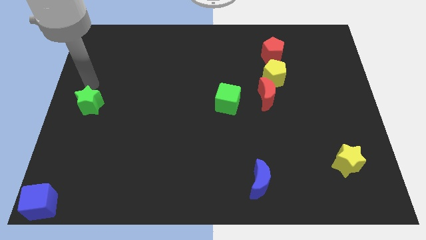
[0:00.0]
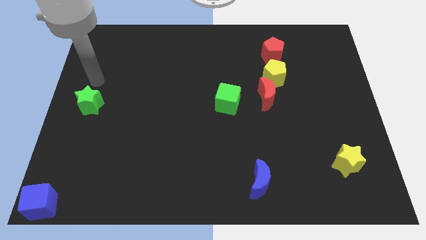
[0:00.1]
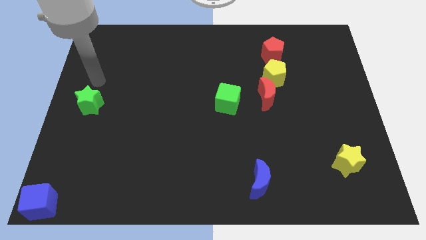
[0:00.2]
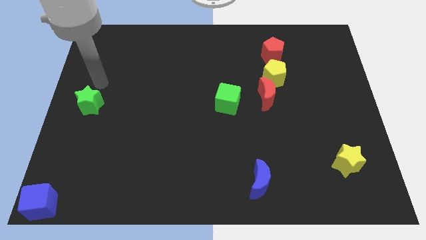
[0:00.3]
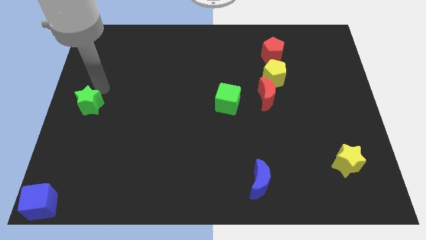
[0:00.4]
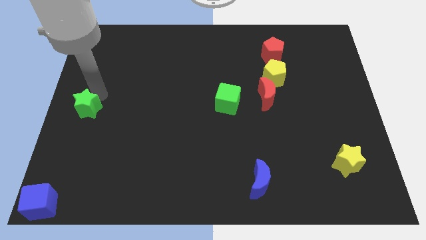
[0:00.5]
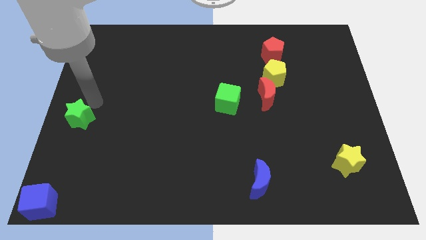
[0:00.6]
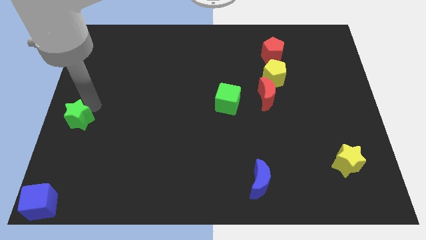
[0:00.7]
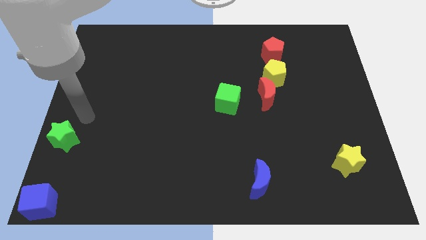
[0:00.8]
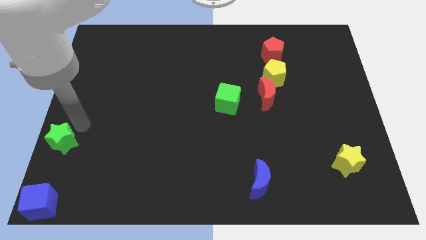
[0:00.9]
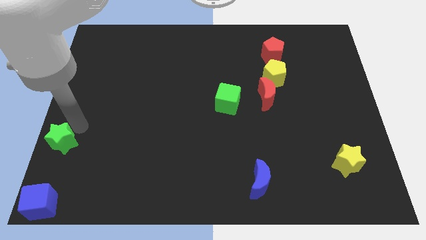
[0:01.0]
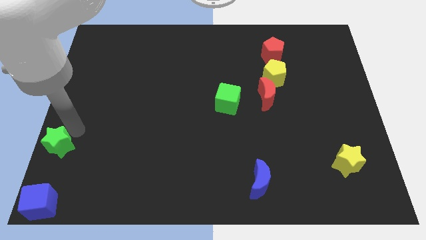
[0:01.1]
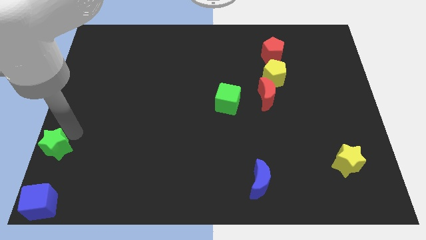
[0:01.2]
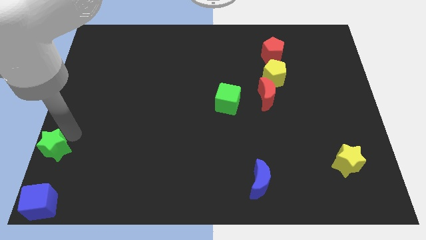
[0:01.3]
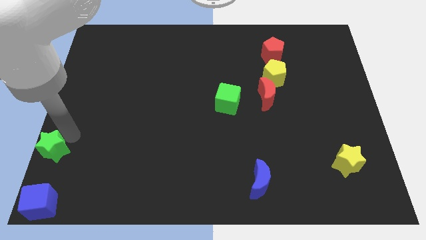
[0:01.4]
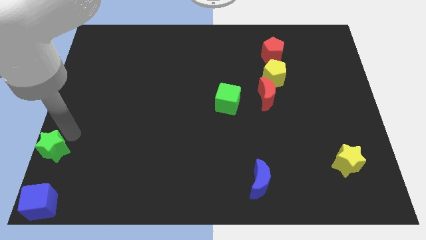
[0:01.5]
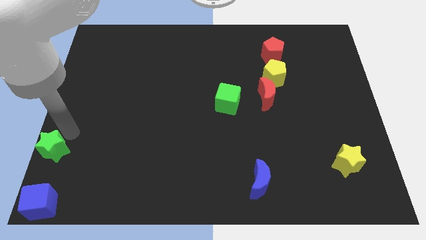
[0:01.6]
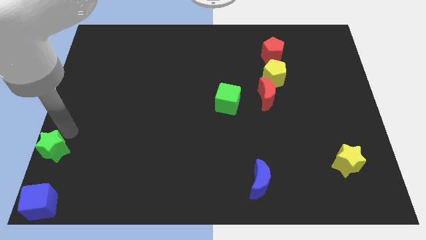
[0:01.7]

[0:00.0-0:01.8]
place the green star at the top of the blue cube

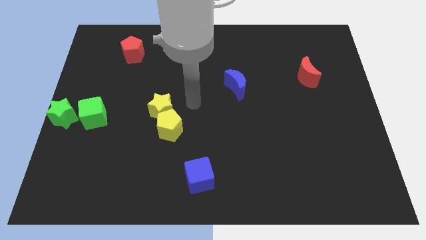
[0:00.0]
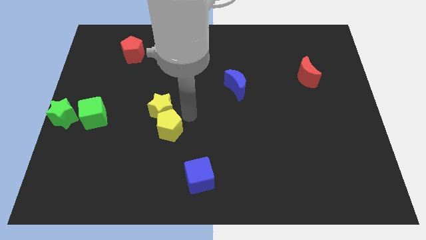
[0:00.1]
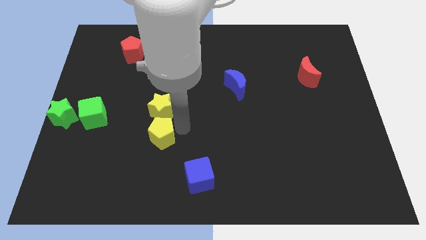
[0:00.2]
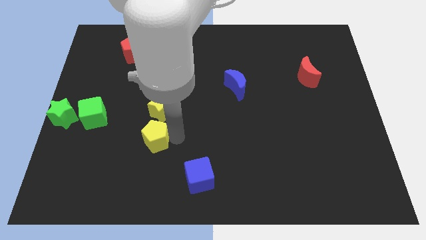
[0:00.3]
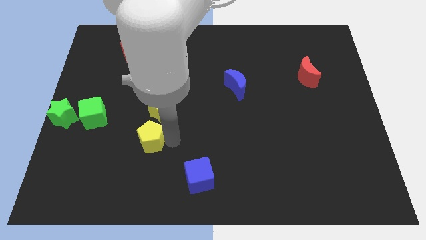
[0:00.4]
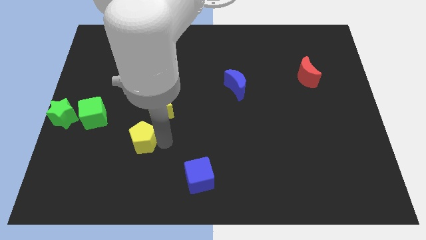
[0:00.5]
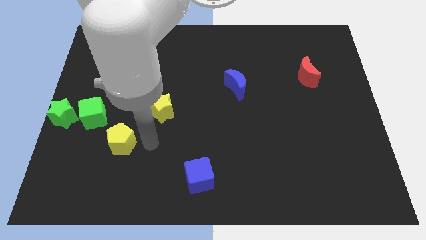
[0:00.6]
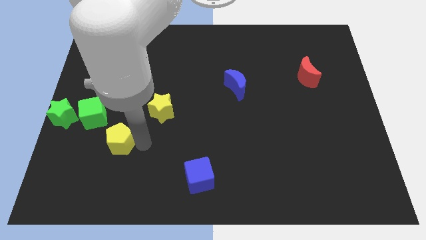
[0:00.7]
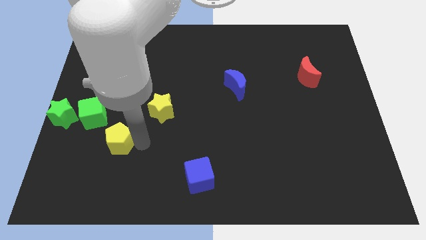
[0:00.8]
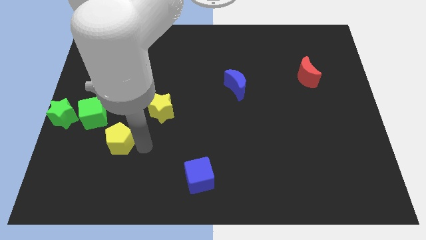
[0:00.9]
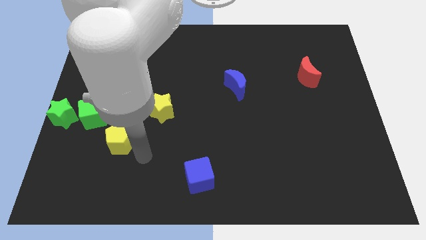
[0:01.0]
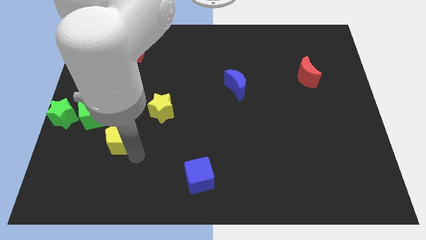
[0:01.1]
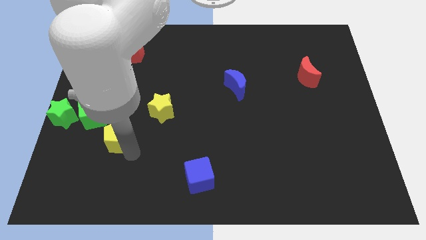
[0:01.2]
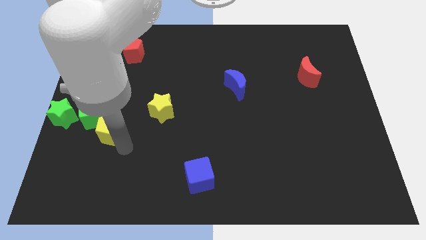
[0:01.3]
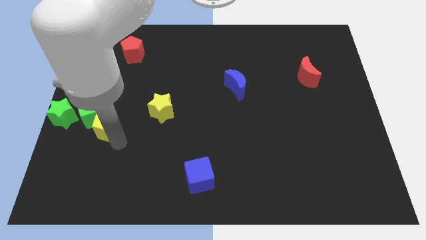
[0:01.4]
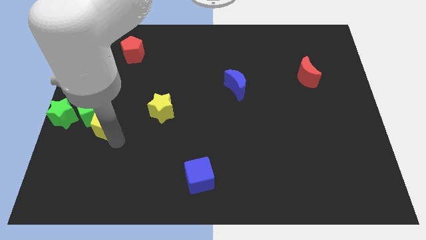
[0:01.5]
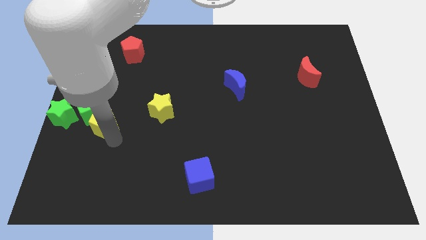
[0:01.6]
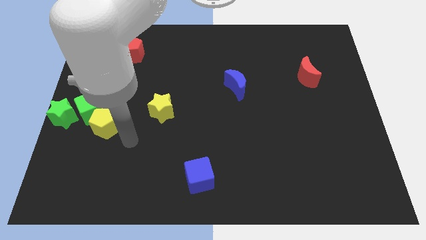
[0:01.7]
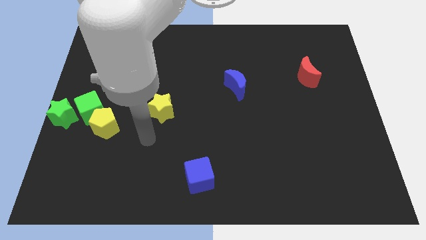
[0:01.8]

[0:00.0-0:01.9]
slide the yellow pentagon into the green cube

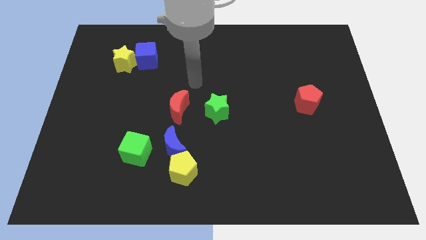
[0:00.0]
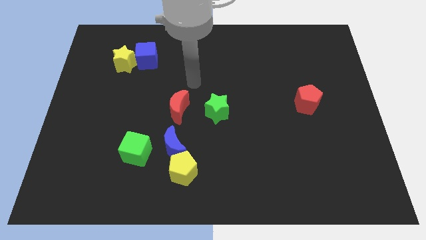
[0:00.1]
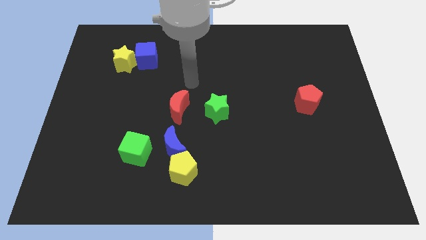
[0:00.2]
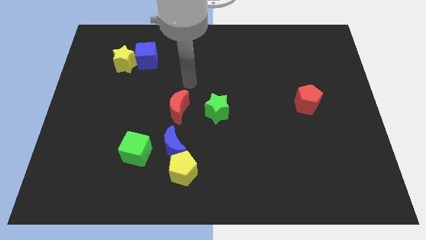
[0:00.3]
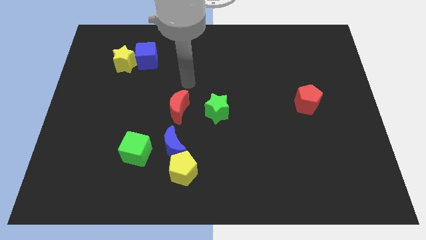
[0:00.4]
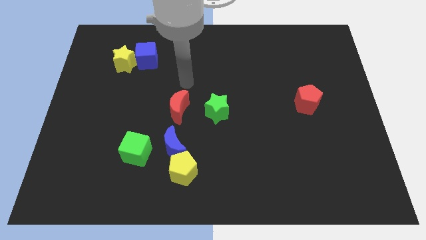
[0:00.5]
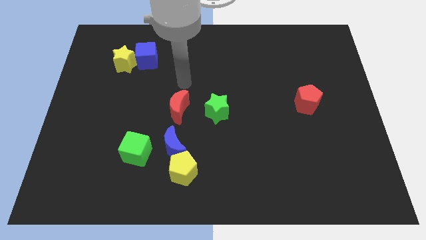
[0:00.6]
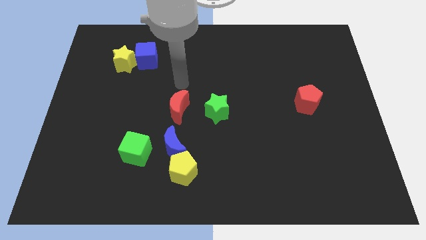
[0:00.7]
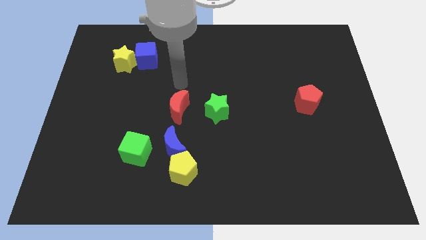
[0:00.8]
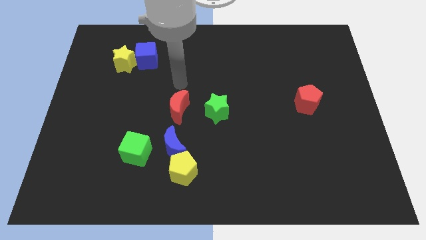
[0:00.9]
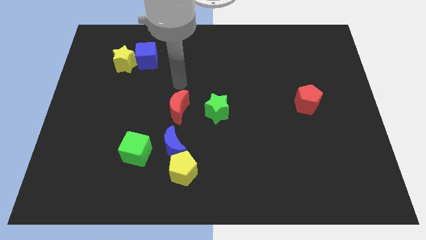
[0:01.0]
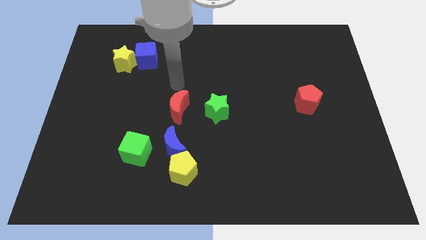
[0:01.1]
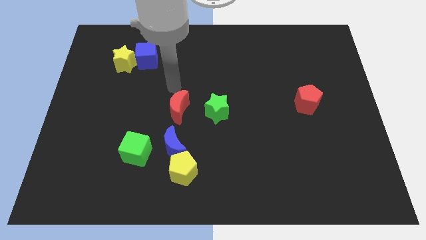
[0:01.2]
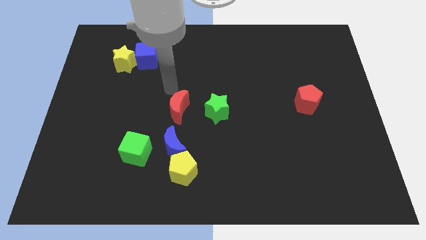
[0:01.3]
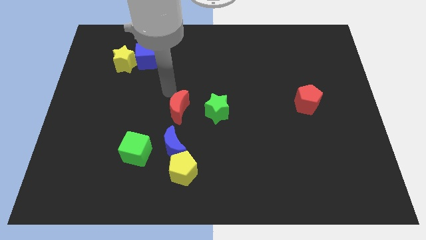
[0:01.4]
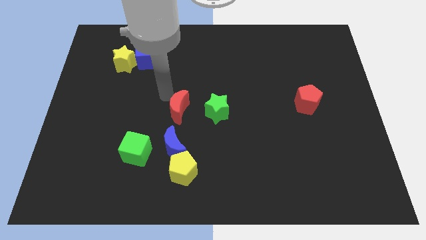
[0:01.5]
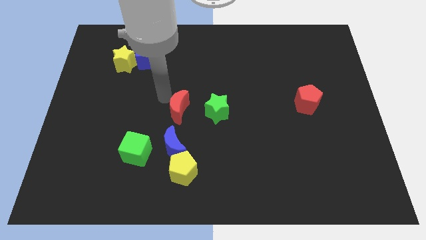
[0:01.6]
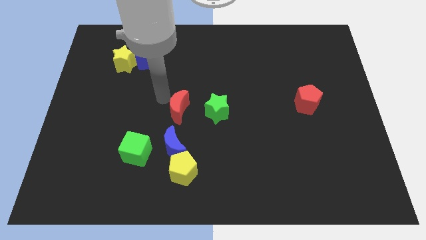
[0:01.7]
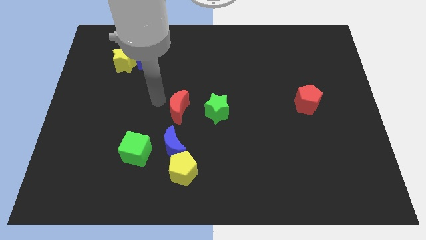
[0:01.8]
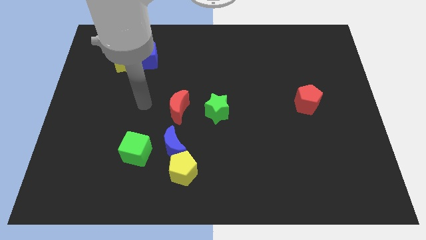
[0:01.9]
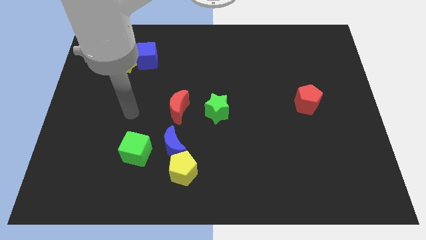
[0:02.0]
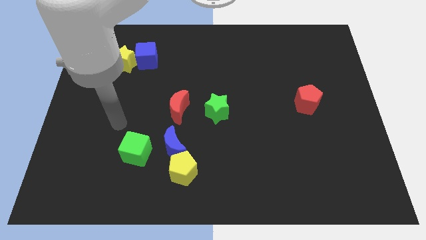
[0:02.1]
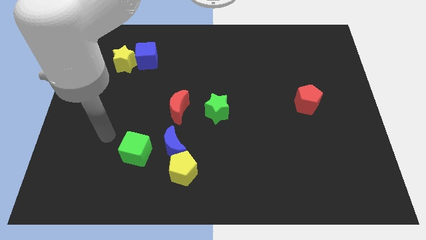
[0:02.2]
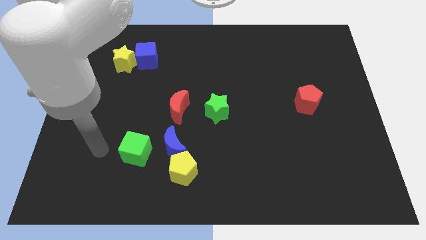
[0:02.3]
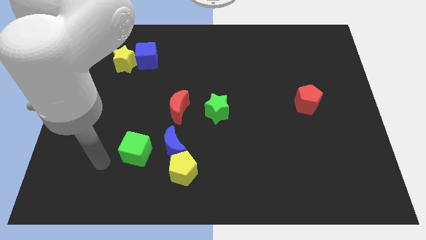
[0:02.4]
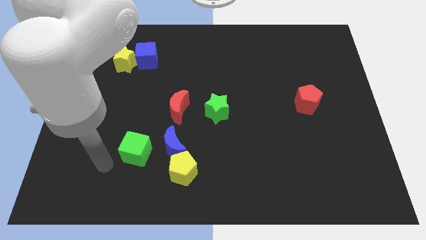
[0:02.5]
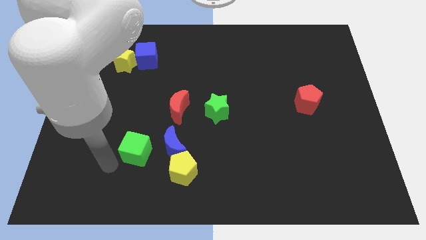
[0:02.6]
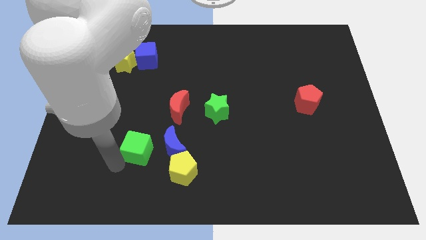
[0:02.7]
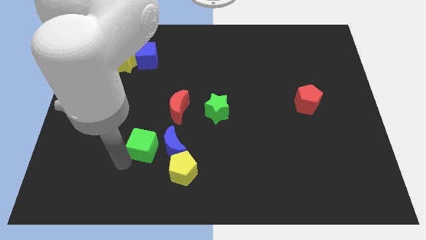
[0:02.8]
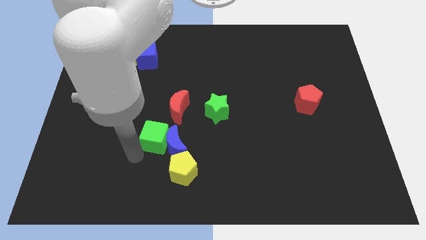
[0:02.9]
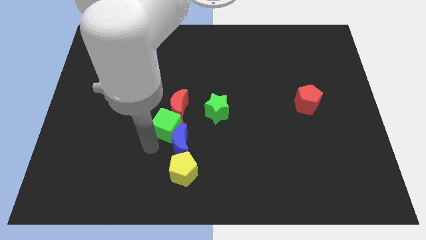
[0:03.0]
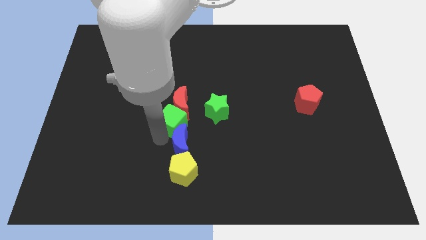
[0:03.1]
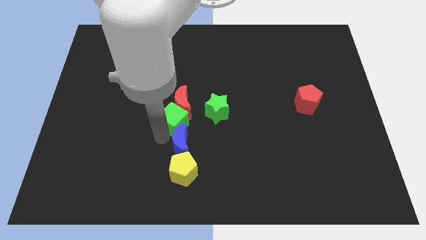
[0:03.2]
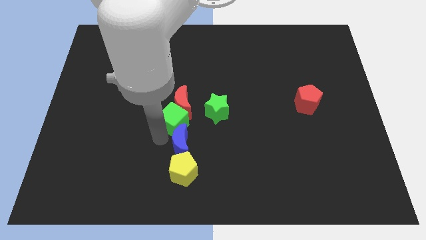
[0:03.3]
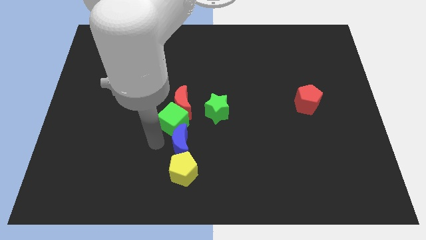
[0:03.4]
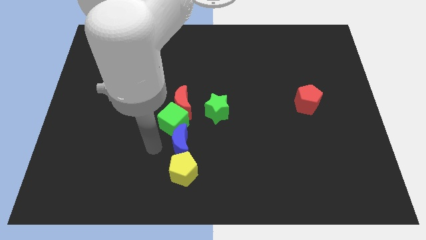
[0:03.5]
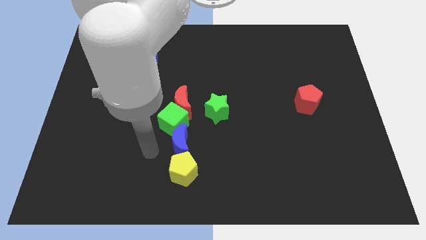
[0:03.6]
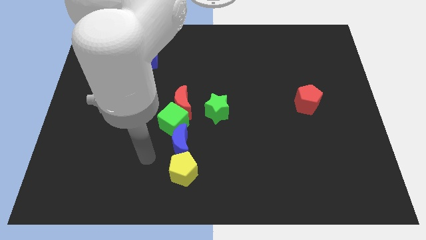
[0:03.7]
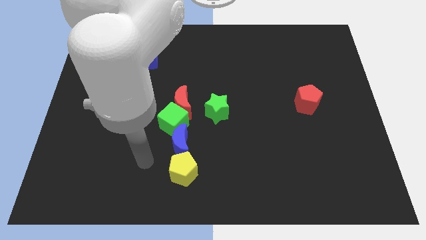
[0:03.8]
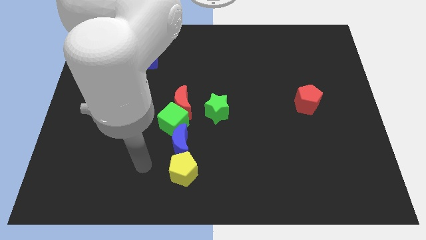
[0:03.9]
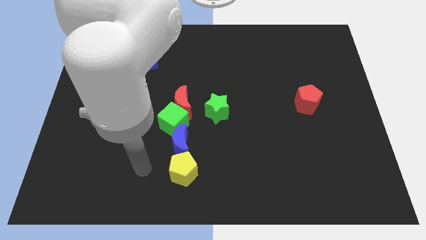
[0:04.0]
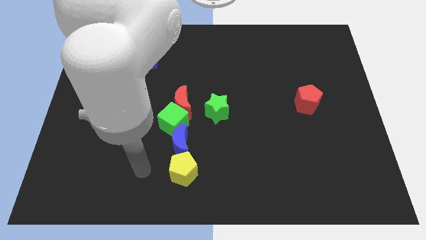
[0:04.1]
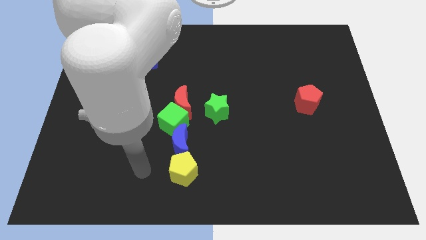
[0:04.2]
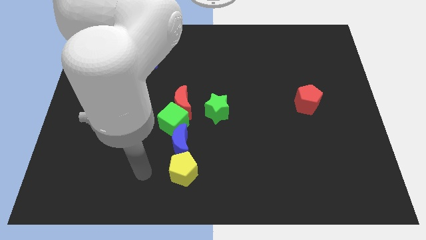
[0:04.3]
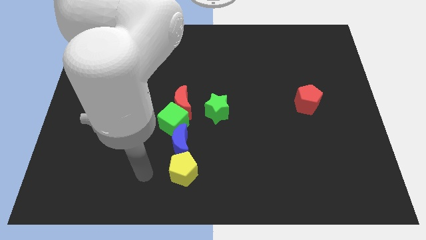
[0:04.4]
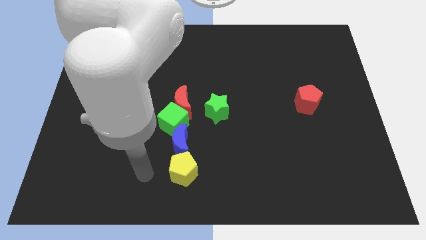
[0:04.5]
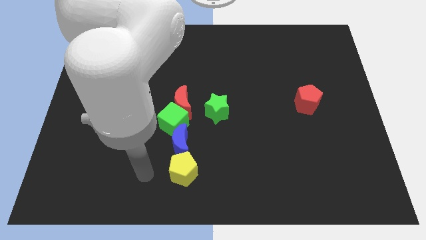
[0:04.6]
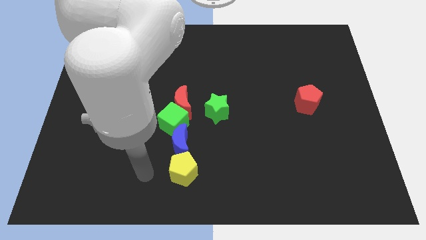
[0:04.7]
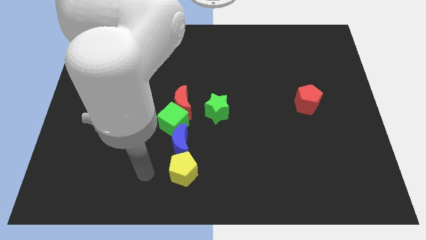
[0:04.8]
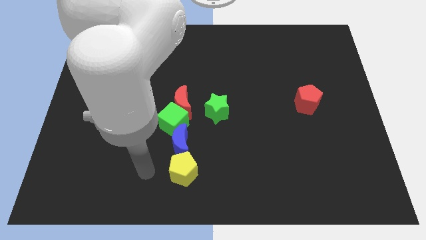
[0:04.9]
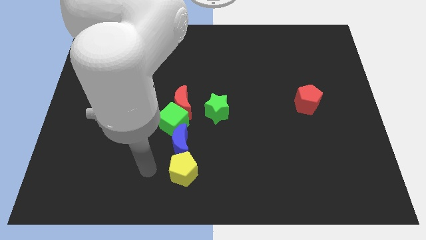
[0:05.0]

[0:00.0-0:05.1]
push the green cube into the group of blocks

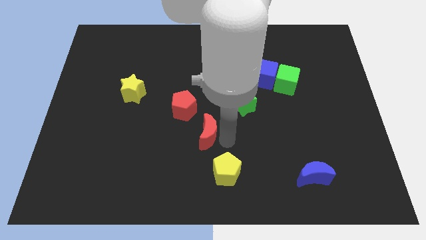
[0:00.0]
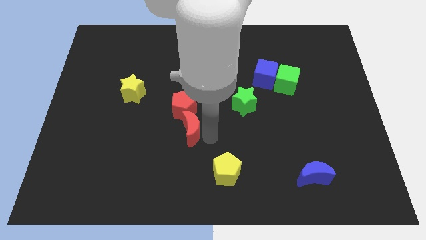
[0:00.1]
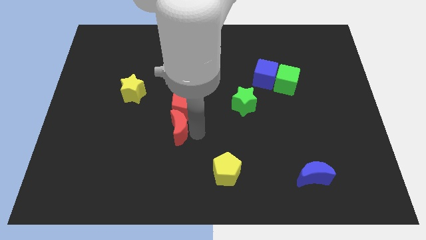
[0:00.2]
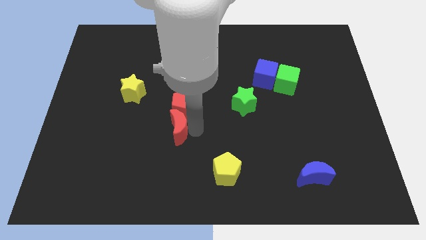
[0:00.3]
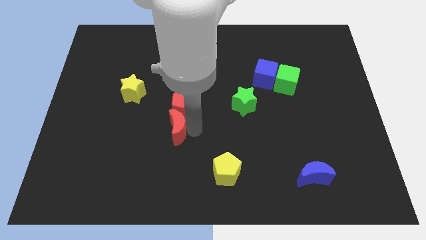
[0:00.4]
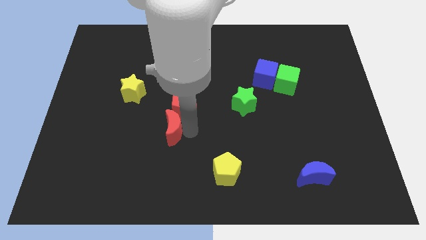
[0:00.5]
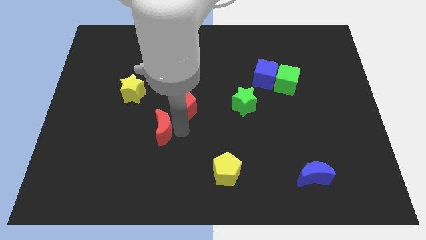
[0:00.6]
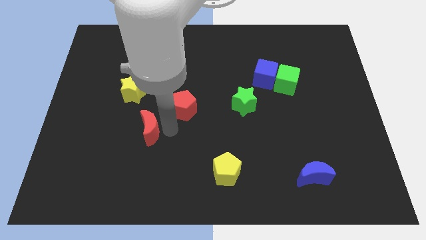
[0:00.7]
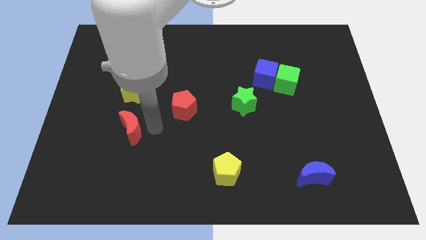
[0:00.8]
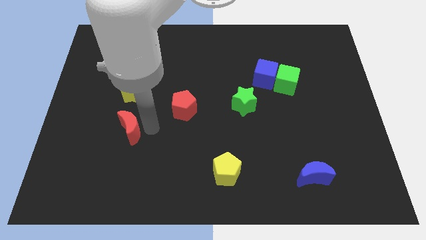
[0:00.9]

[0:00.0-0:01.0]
slide the red moon below the yellow star
